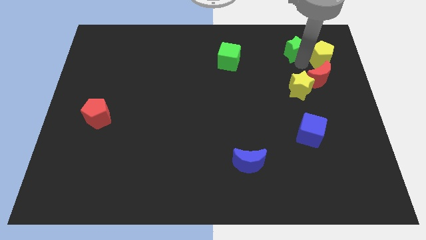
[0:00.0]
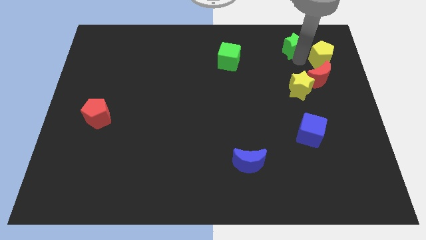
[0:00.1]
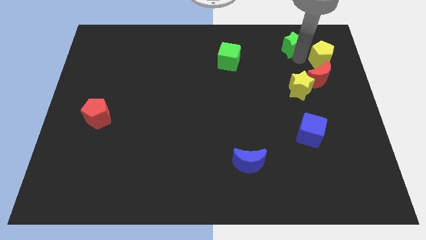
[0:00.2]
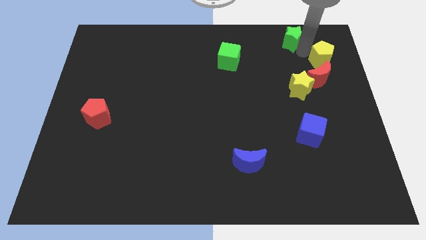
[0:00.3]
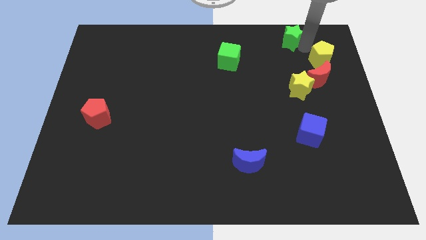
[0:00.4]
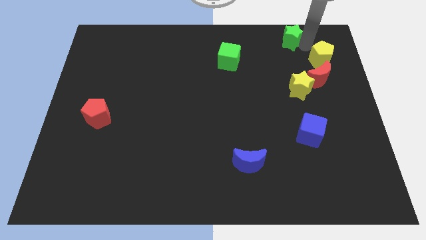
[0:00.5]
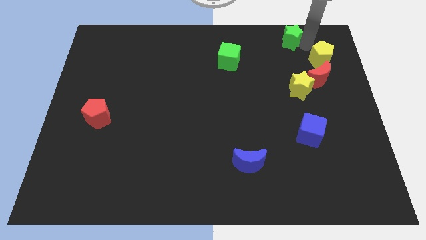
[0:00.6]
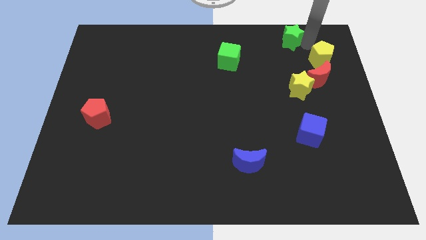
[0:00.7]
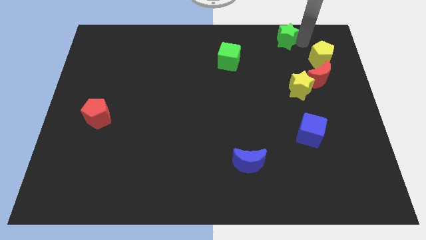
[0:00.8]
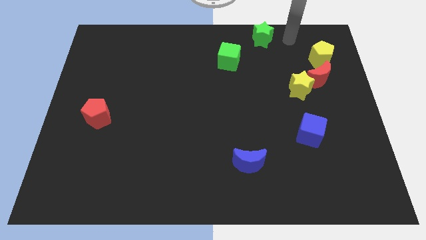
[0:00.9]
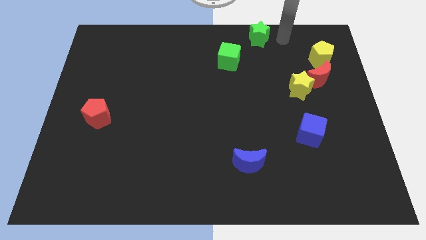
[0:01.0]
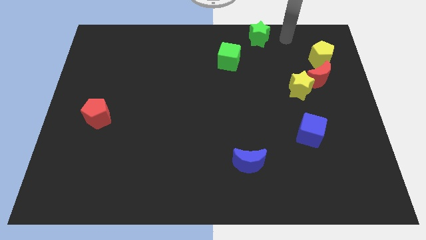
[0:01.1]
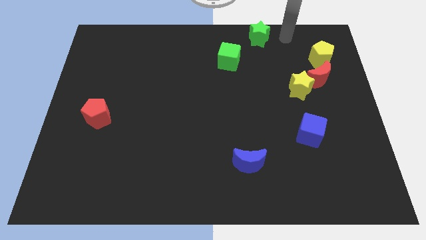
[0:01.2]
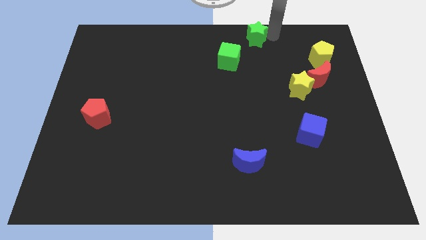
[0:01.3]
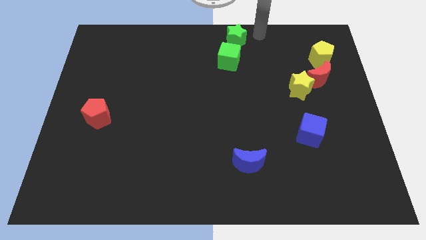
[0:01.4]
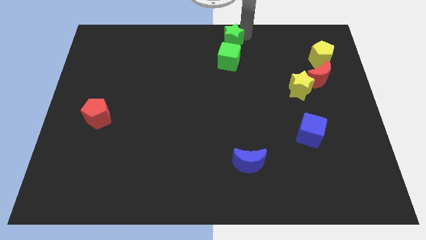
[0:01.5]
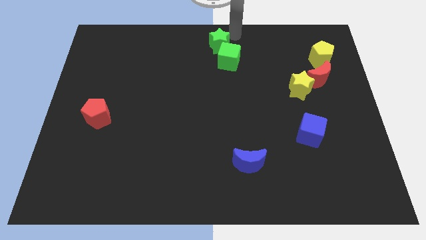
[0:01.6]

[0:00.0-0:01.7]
place the green star on top of green cube

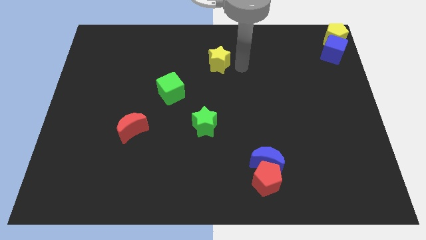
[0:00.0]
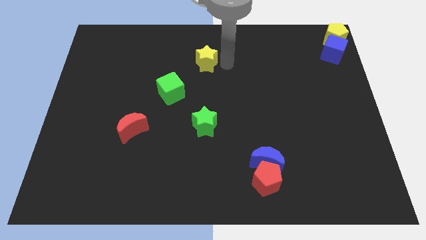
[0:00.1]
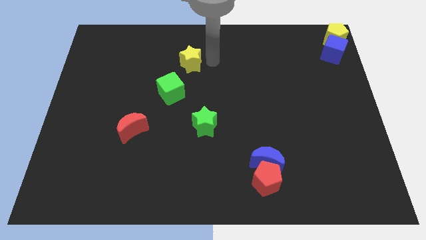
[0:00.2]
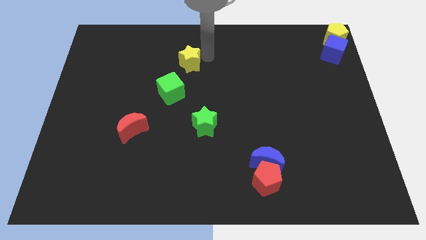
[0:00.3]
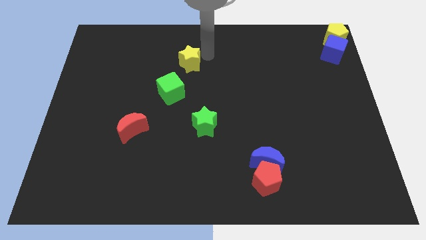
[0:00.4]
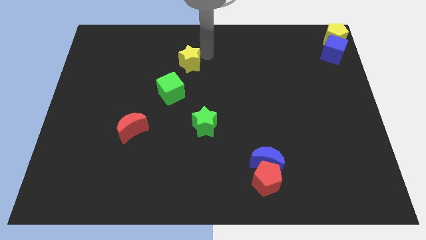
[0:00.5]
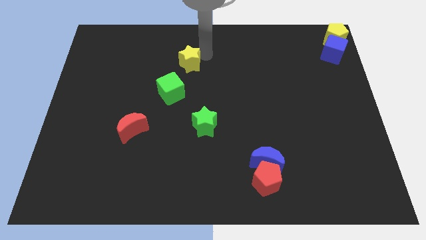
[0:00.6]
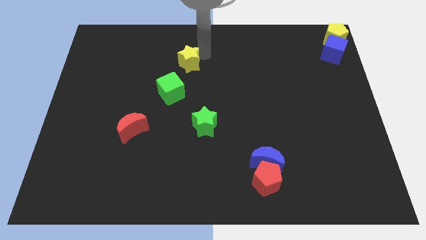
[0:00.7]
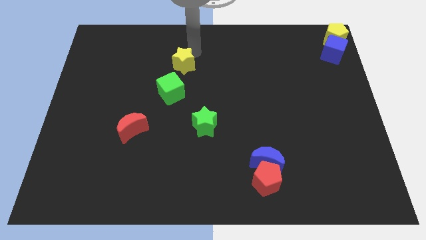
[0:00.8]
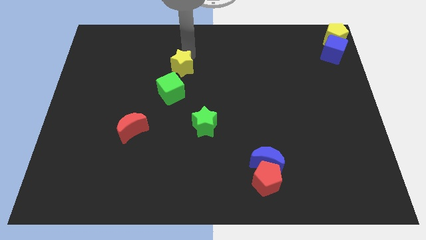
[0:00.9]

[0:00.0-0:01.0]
push the yellow star towards the top of the green cube

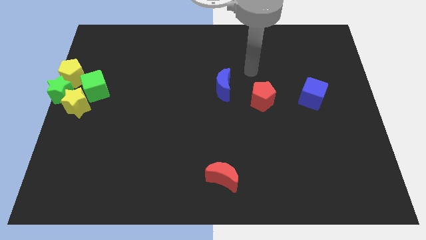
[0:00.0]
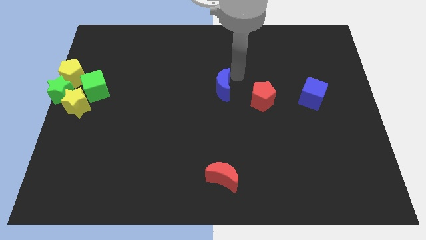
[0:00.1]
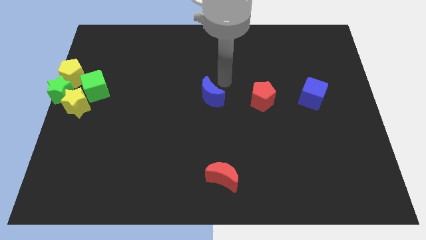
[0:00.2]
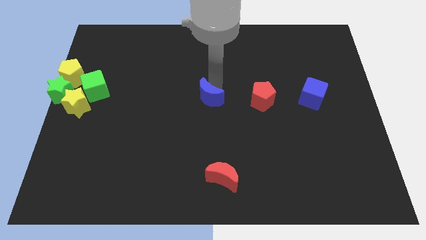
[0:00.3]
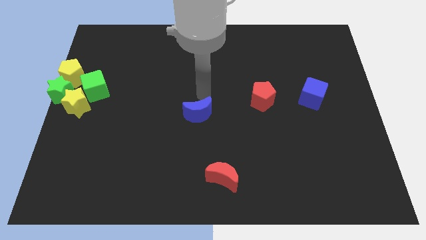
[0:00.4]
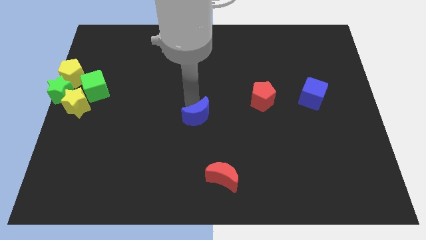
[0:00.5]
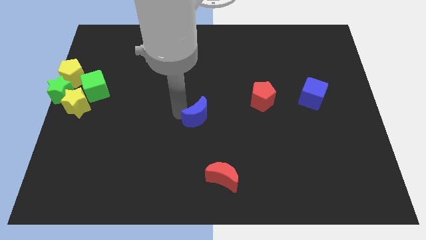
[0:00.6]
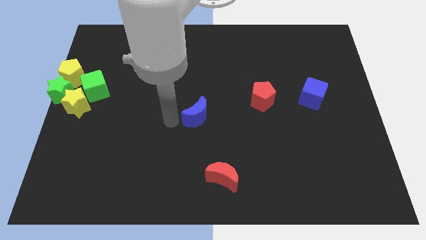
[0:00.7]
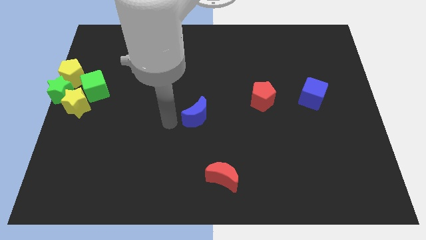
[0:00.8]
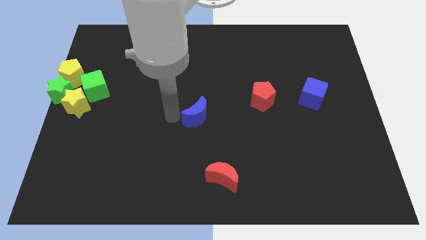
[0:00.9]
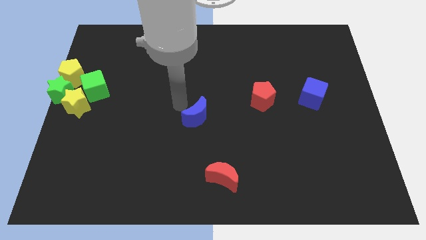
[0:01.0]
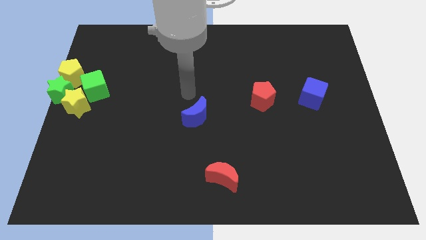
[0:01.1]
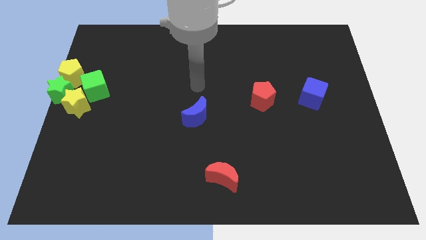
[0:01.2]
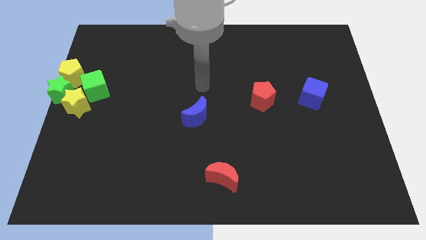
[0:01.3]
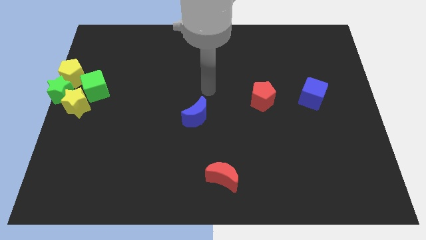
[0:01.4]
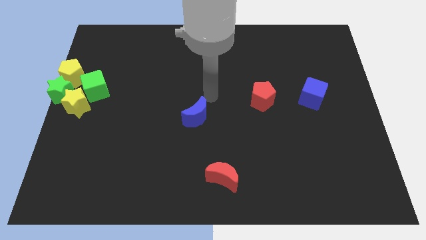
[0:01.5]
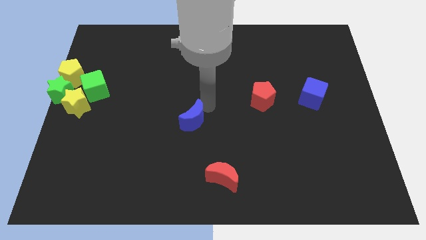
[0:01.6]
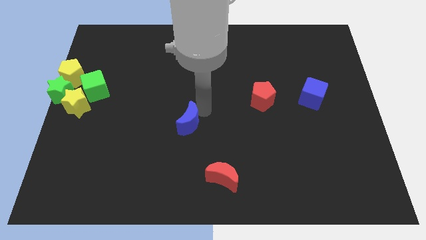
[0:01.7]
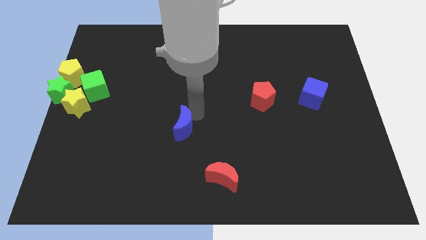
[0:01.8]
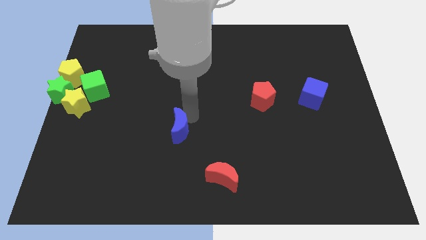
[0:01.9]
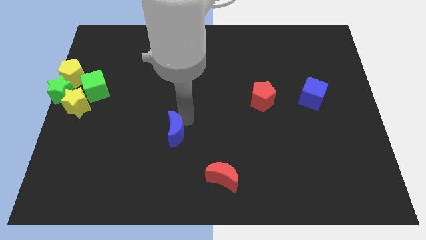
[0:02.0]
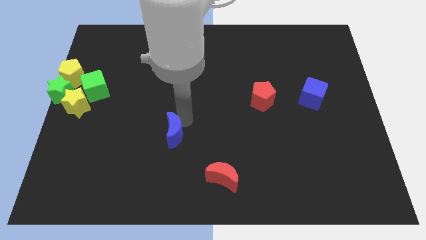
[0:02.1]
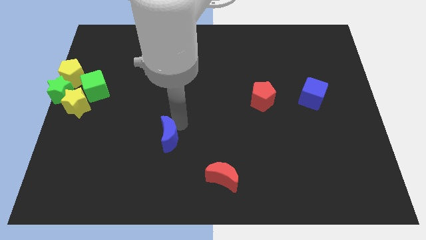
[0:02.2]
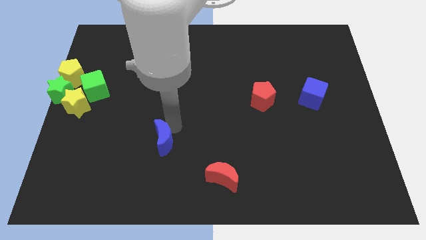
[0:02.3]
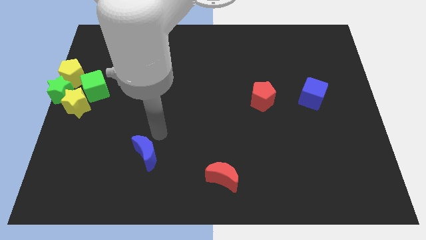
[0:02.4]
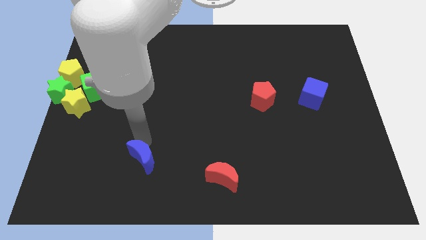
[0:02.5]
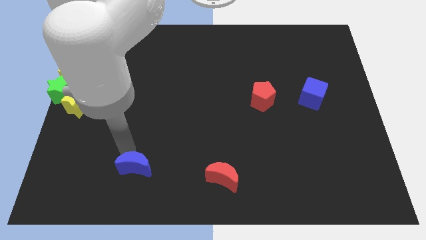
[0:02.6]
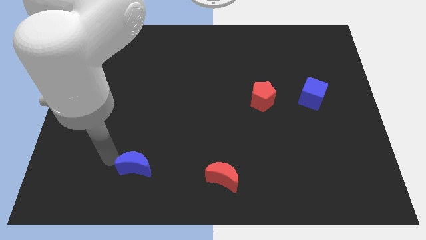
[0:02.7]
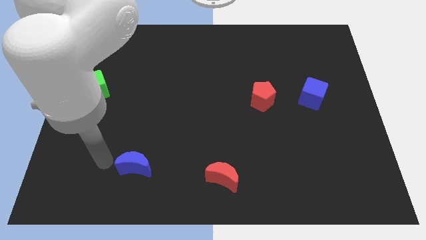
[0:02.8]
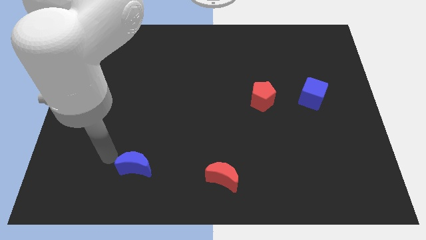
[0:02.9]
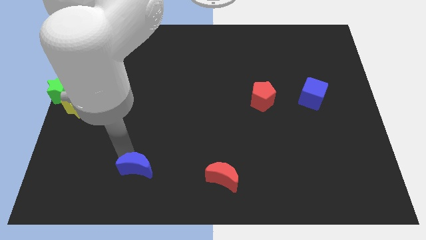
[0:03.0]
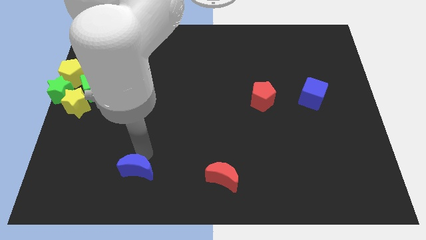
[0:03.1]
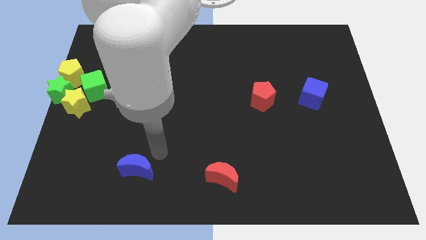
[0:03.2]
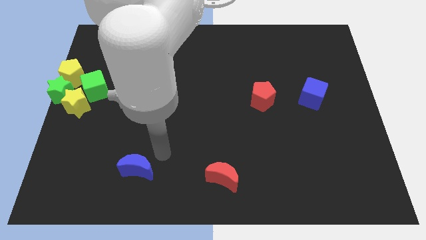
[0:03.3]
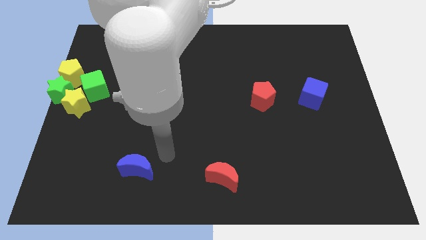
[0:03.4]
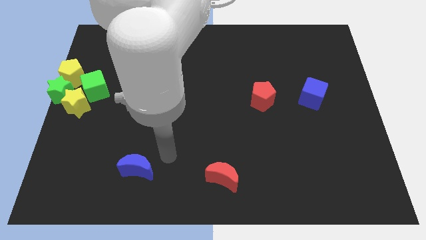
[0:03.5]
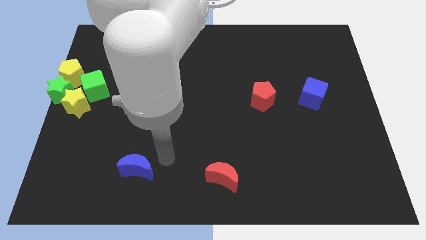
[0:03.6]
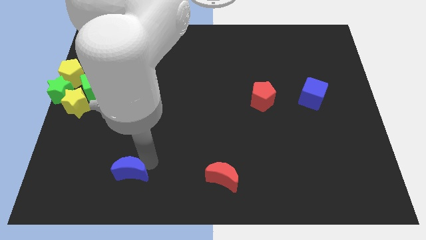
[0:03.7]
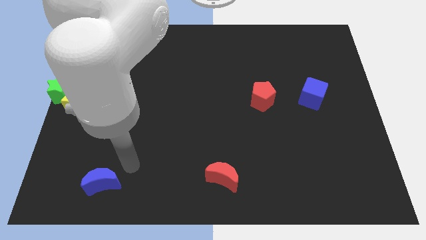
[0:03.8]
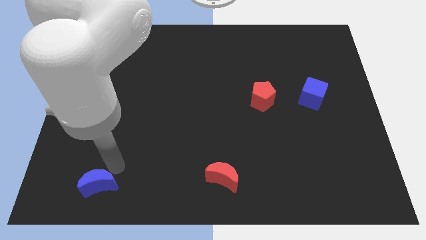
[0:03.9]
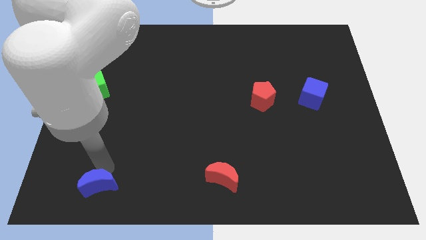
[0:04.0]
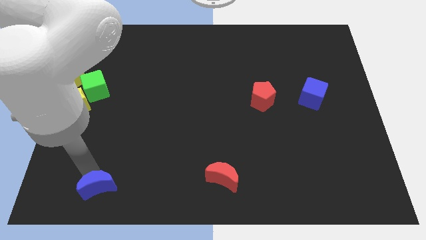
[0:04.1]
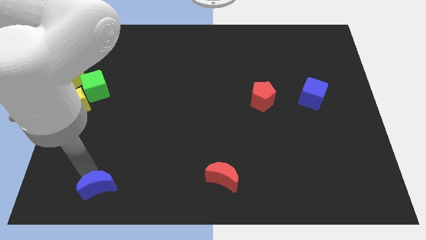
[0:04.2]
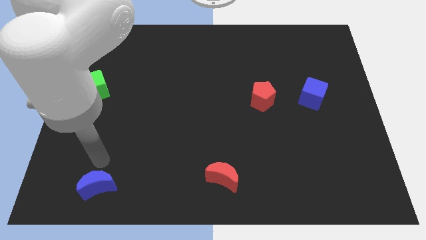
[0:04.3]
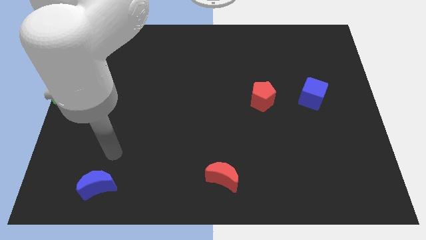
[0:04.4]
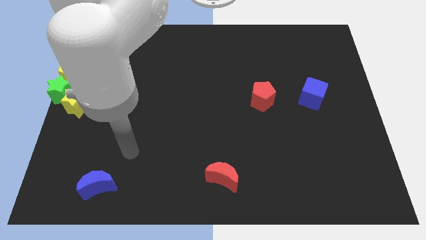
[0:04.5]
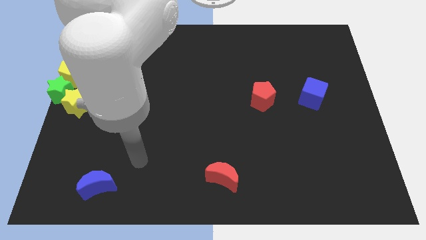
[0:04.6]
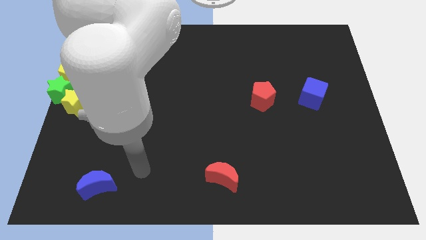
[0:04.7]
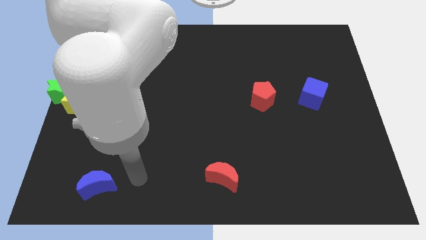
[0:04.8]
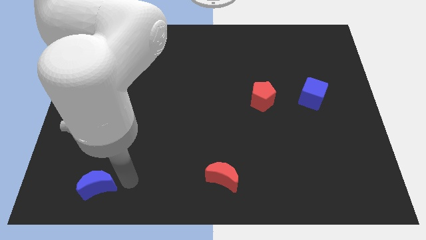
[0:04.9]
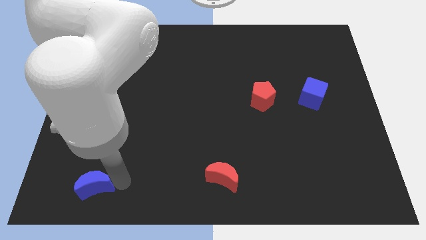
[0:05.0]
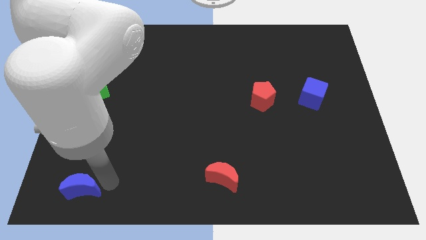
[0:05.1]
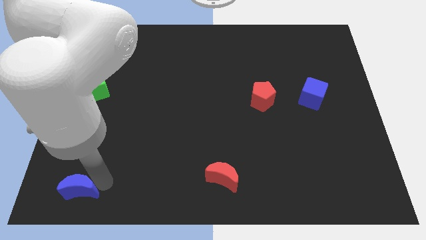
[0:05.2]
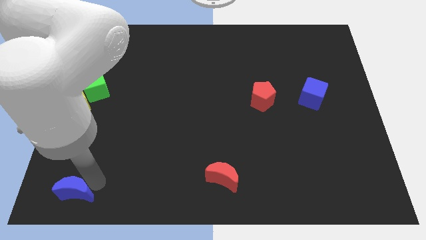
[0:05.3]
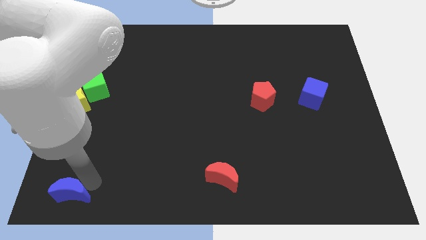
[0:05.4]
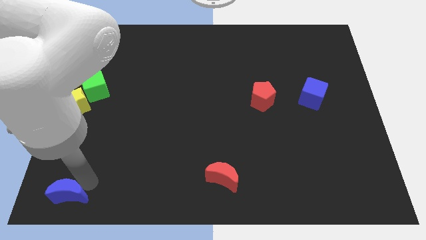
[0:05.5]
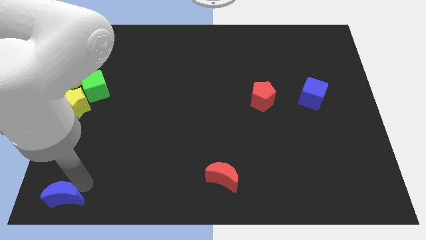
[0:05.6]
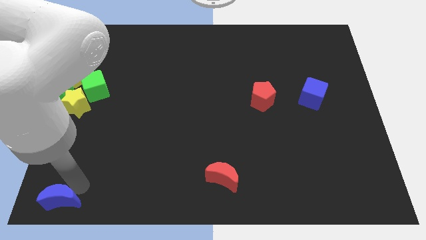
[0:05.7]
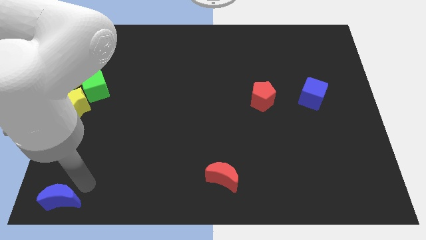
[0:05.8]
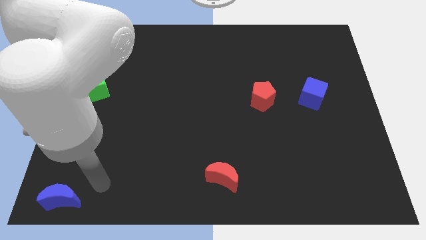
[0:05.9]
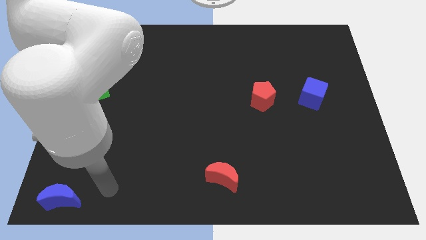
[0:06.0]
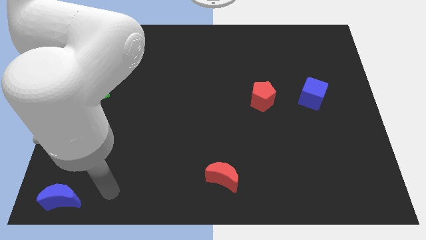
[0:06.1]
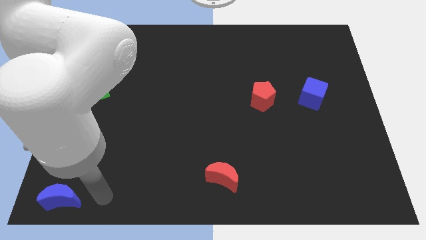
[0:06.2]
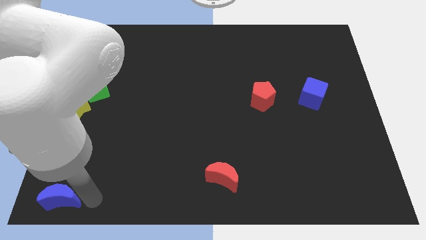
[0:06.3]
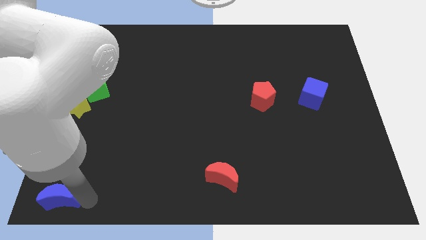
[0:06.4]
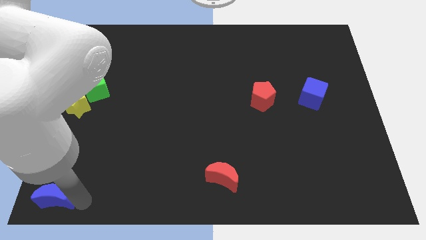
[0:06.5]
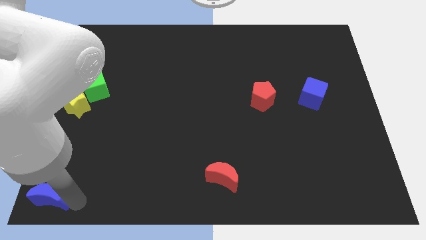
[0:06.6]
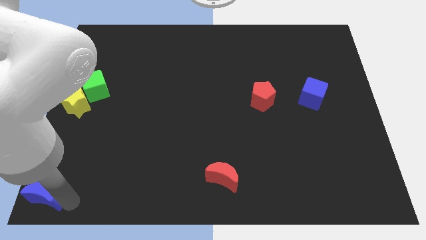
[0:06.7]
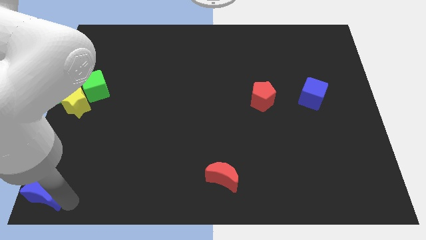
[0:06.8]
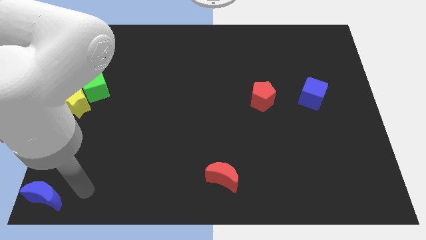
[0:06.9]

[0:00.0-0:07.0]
drag the blue crescent to the bottom left corner
